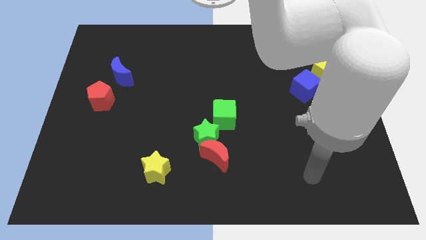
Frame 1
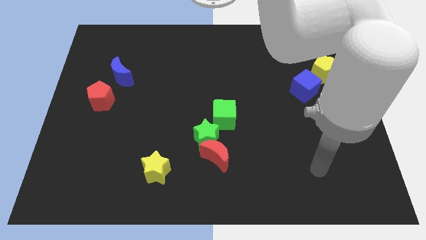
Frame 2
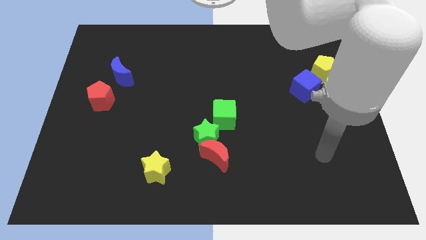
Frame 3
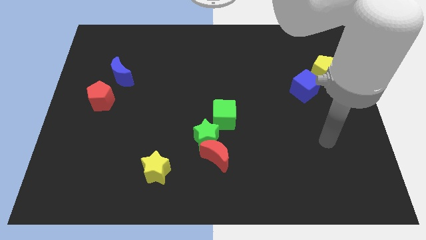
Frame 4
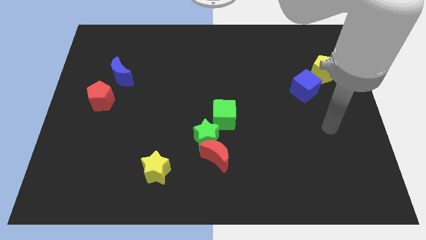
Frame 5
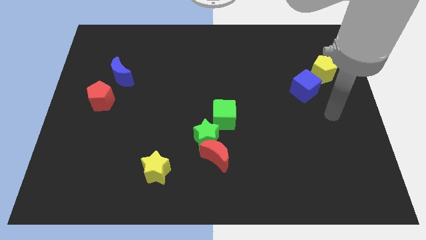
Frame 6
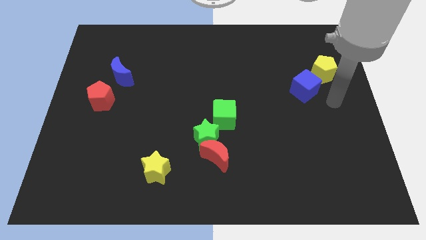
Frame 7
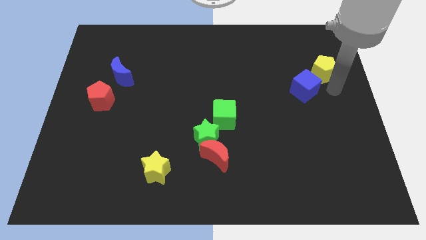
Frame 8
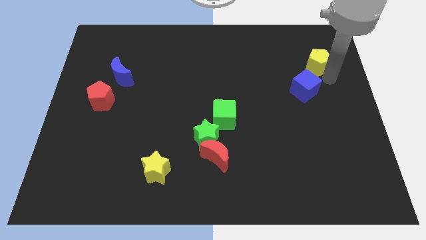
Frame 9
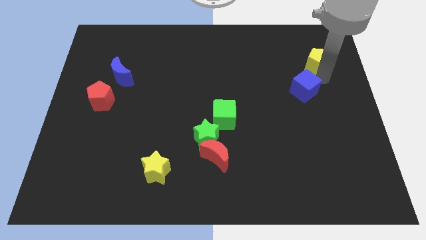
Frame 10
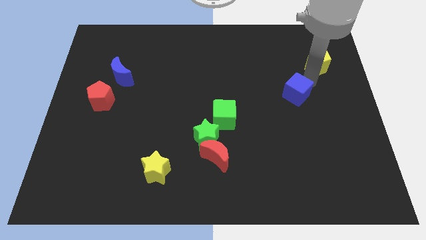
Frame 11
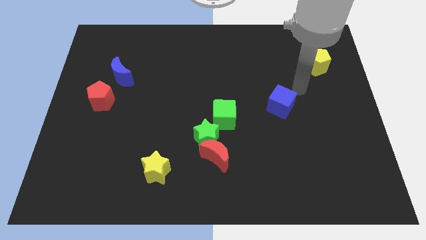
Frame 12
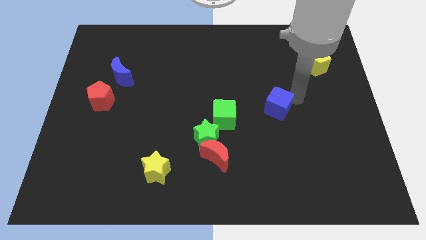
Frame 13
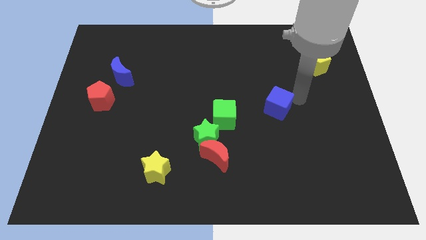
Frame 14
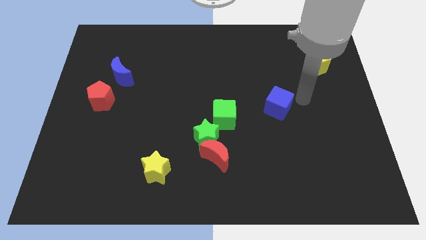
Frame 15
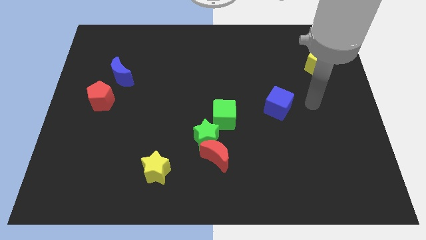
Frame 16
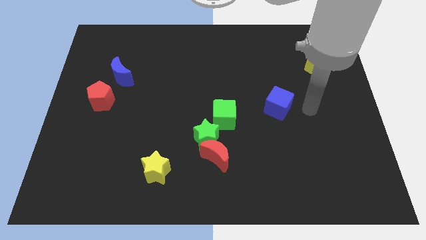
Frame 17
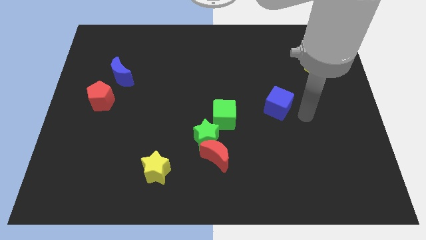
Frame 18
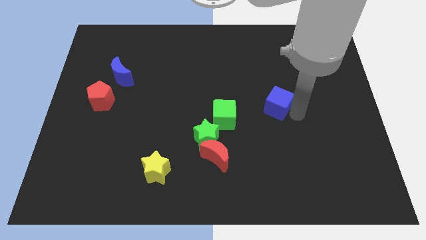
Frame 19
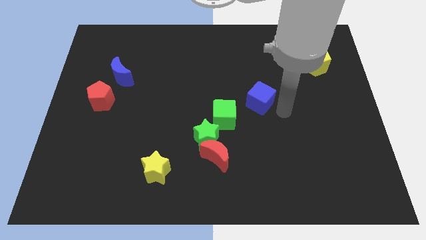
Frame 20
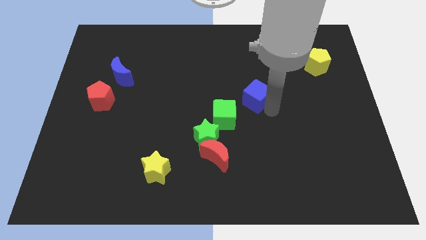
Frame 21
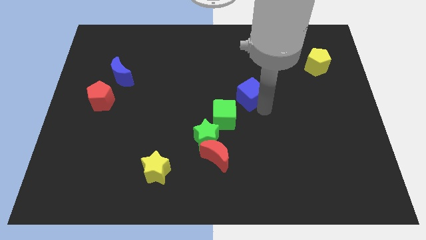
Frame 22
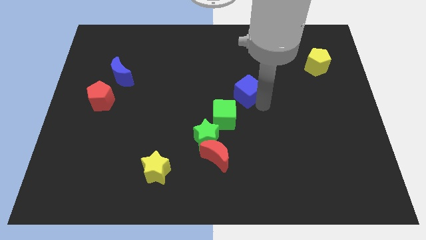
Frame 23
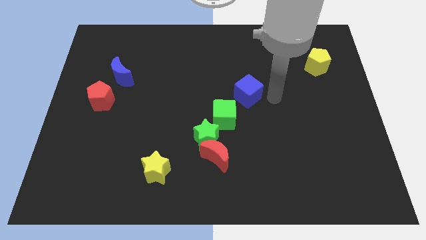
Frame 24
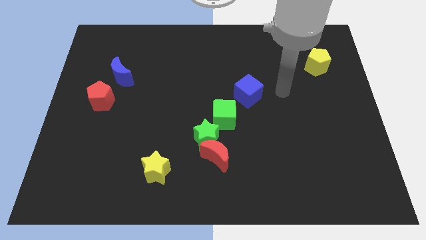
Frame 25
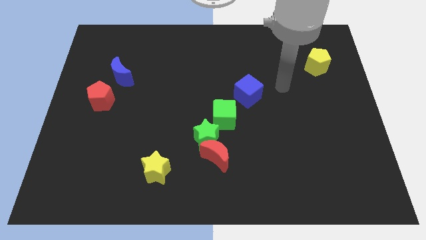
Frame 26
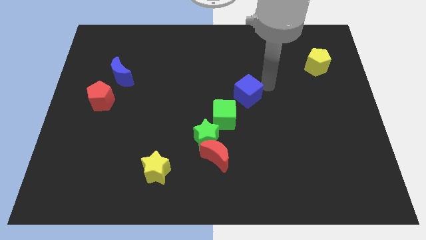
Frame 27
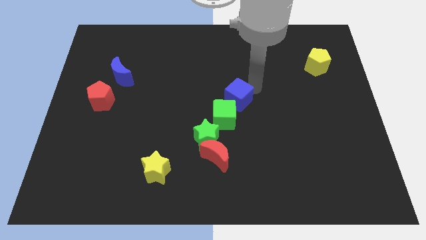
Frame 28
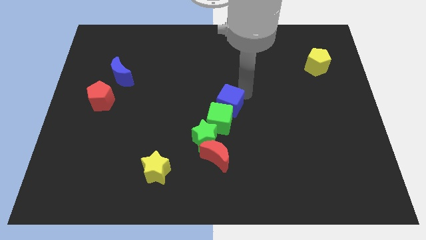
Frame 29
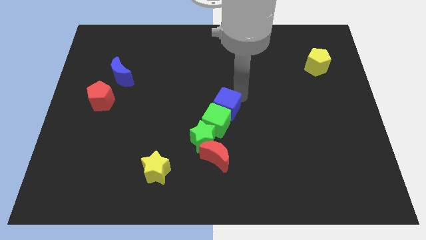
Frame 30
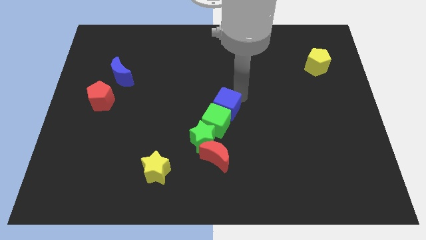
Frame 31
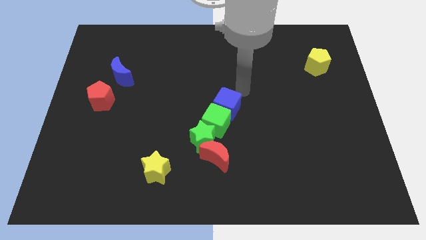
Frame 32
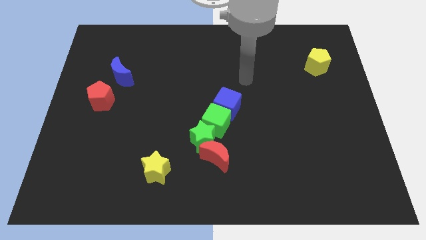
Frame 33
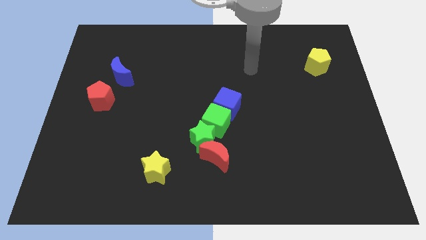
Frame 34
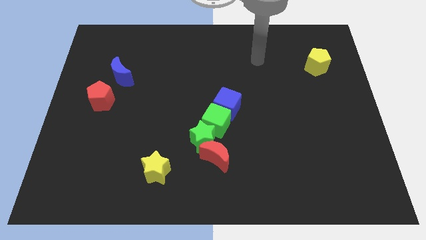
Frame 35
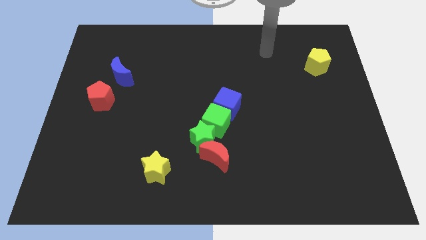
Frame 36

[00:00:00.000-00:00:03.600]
move the blue cube to the center side

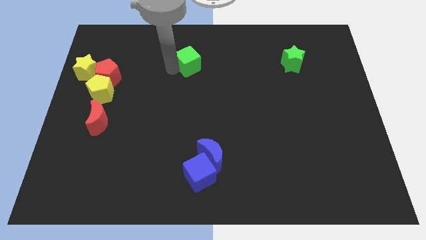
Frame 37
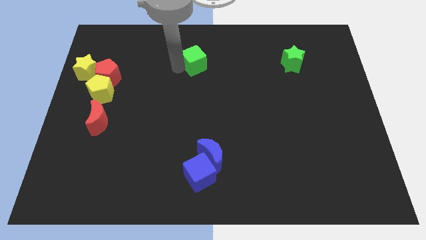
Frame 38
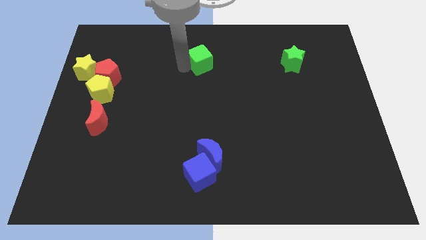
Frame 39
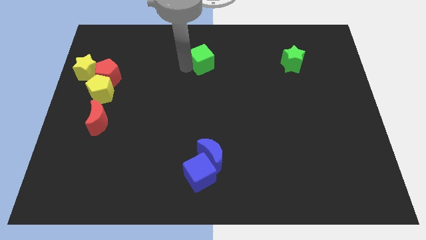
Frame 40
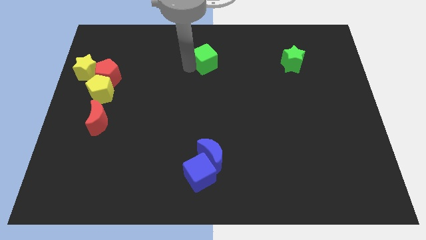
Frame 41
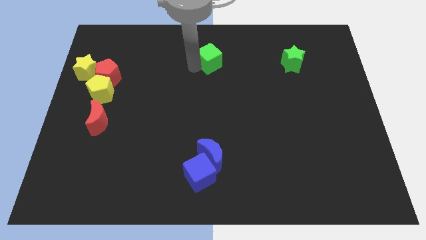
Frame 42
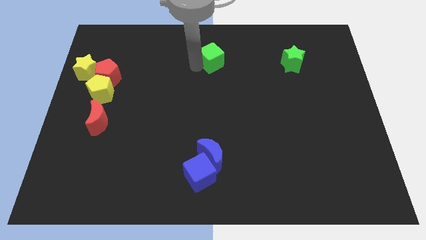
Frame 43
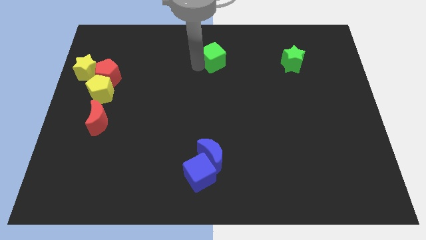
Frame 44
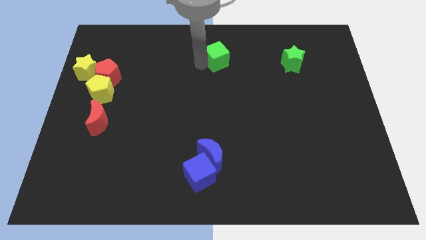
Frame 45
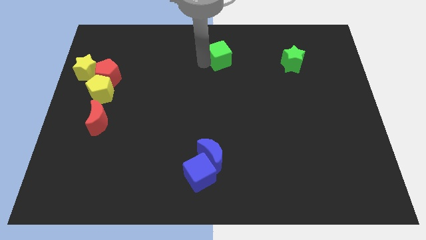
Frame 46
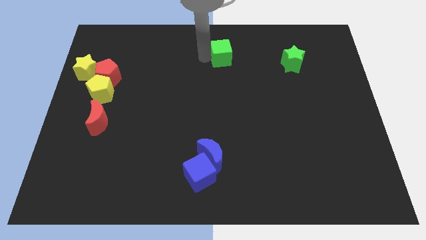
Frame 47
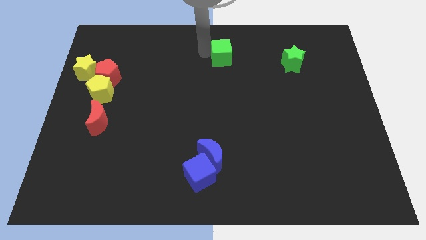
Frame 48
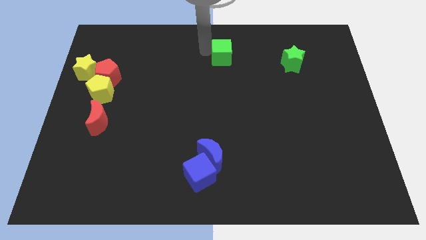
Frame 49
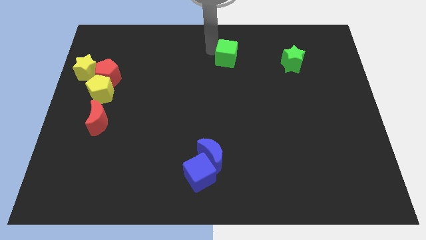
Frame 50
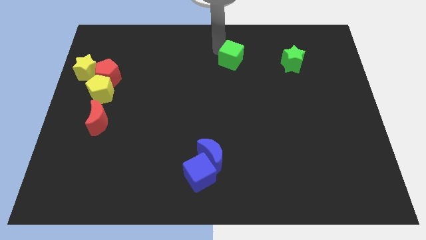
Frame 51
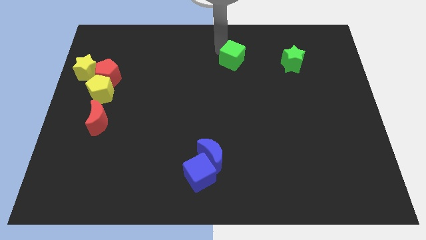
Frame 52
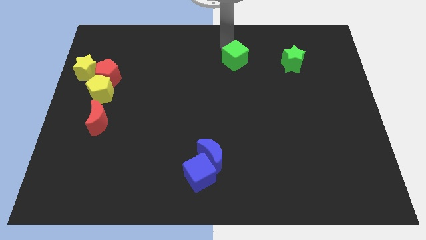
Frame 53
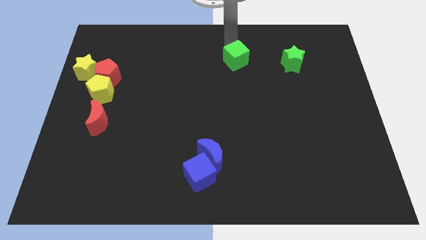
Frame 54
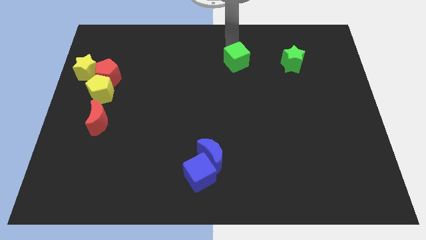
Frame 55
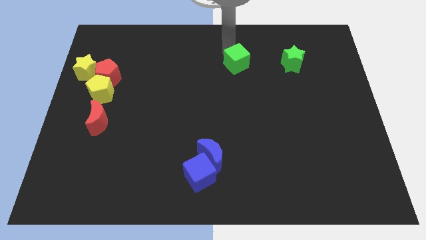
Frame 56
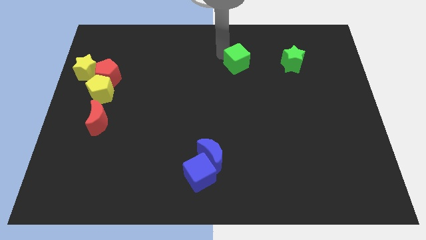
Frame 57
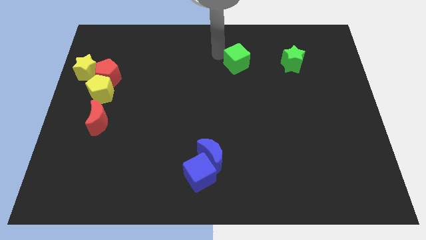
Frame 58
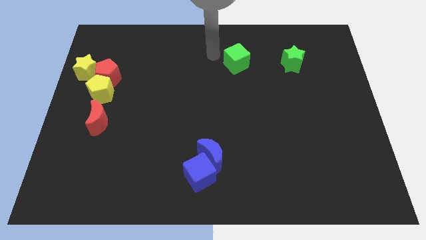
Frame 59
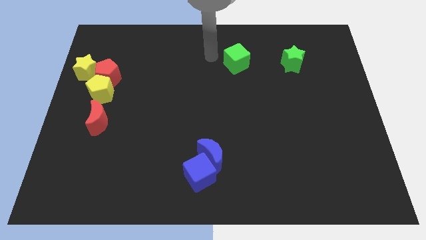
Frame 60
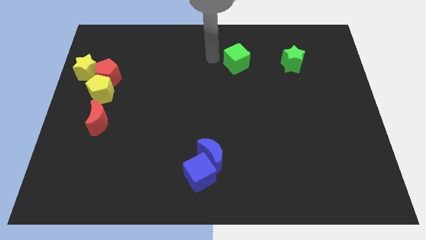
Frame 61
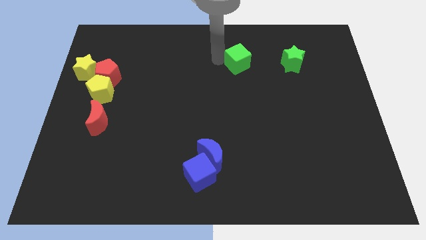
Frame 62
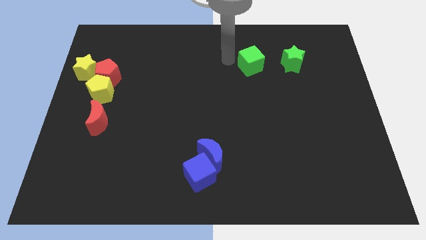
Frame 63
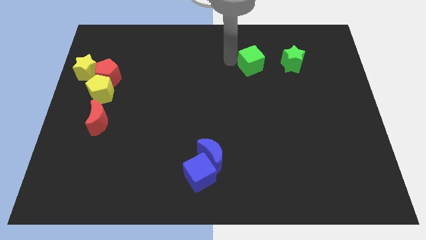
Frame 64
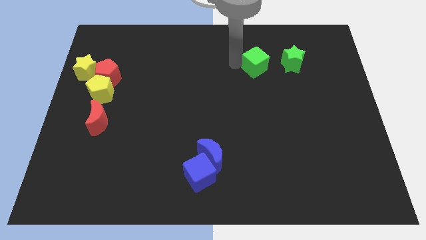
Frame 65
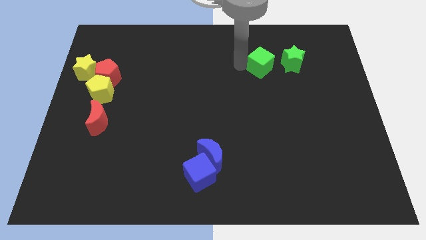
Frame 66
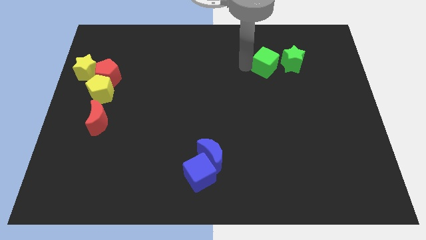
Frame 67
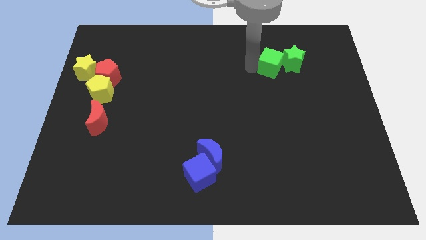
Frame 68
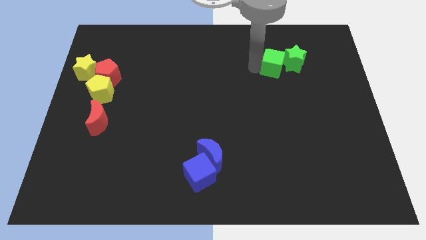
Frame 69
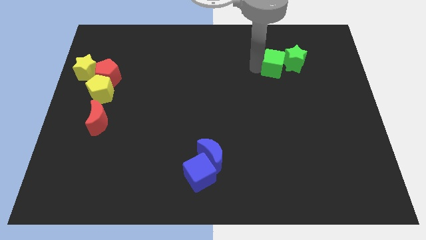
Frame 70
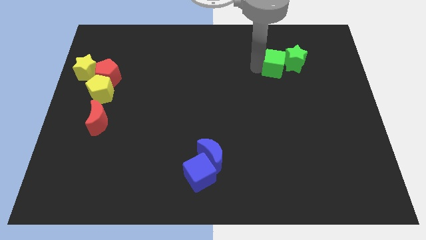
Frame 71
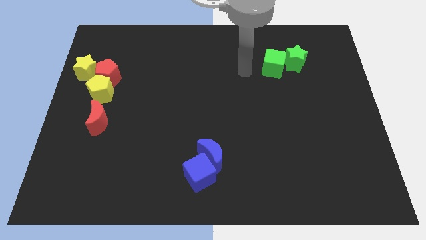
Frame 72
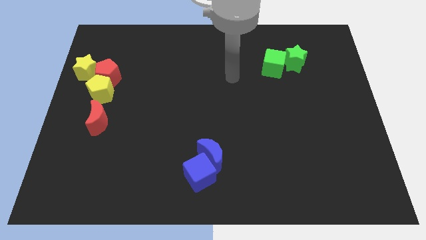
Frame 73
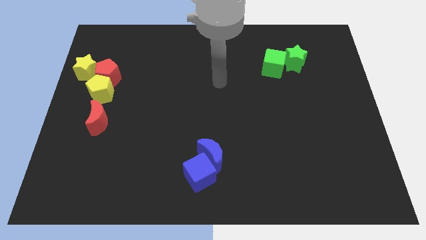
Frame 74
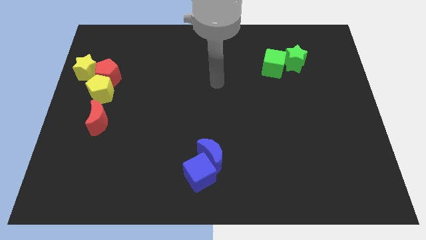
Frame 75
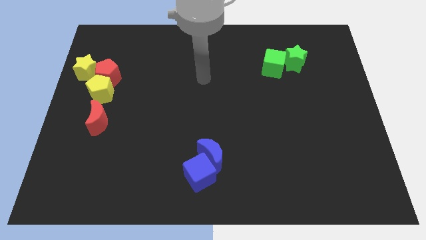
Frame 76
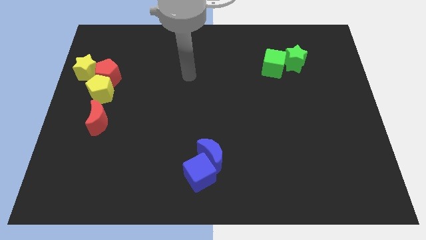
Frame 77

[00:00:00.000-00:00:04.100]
push green cube to the left of green star

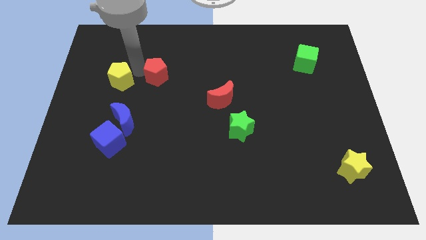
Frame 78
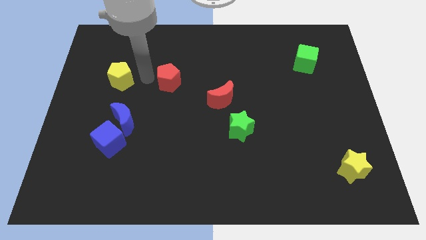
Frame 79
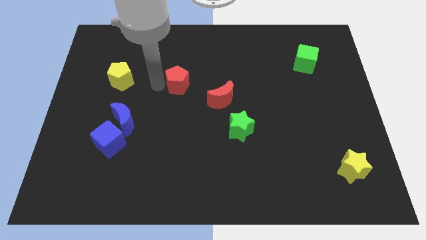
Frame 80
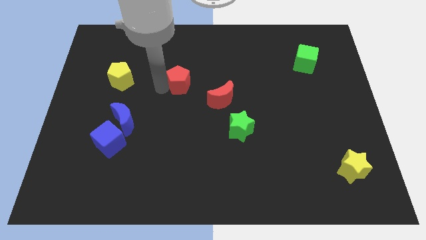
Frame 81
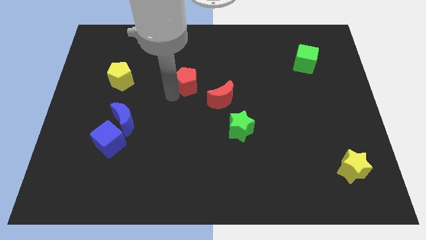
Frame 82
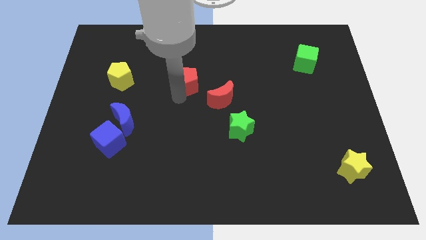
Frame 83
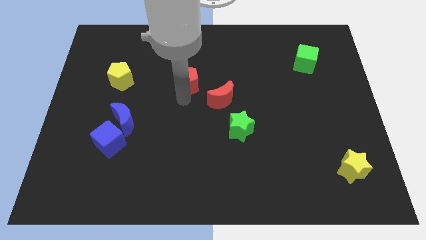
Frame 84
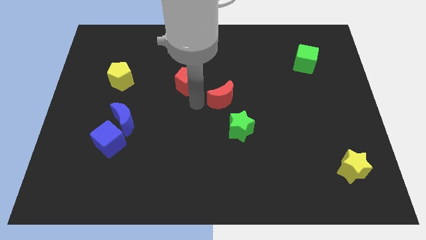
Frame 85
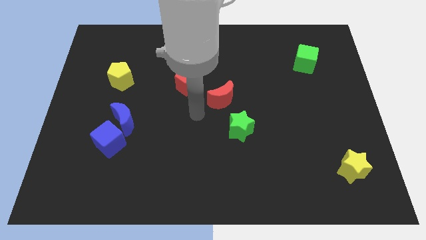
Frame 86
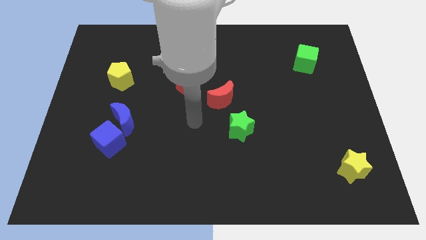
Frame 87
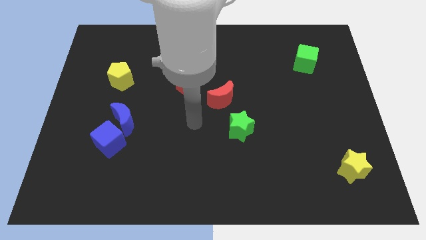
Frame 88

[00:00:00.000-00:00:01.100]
move the red pentagon towards the red moon
